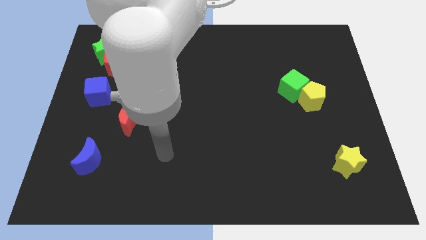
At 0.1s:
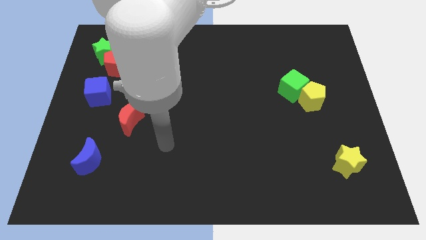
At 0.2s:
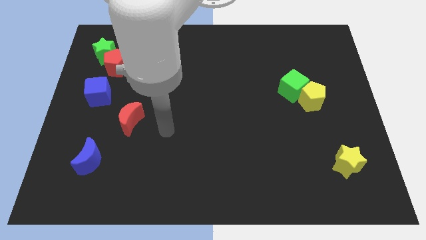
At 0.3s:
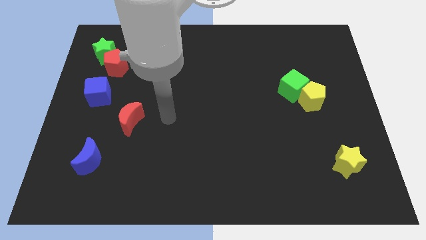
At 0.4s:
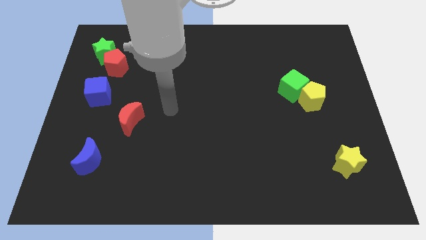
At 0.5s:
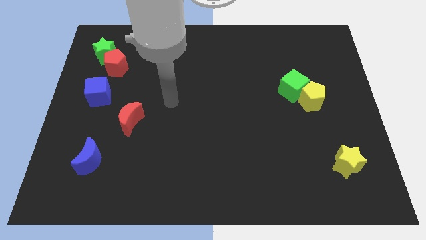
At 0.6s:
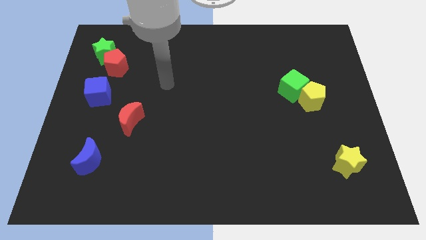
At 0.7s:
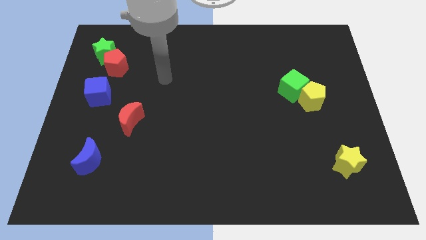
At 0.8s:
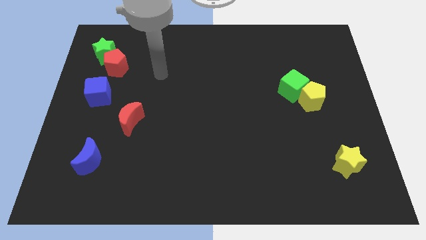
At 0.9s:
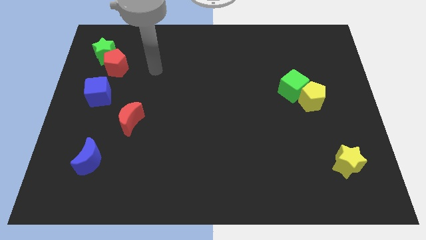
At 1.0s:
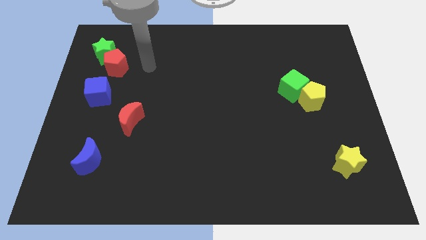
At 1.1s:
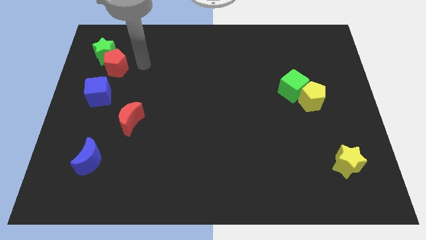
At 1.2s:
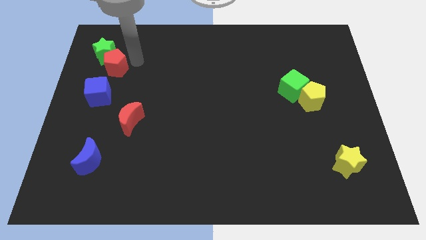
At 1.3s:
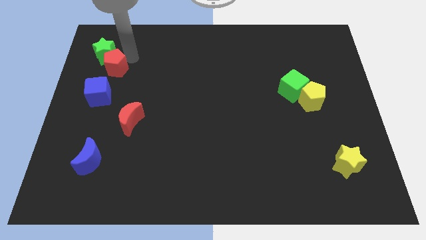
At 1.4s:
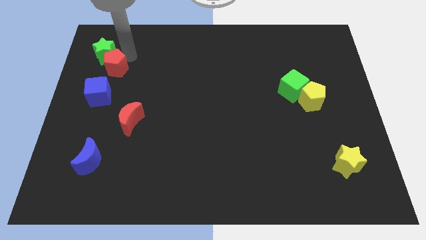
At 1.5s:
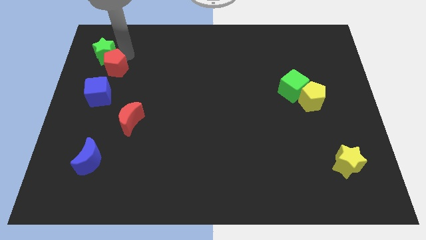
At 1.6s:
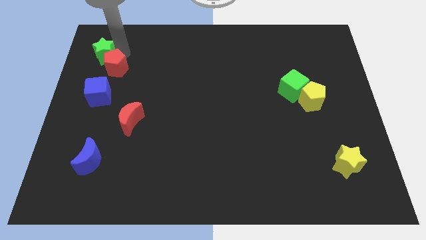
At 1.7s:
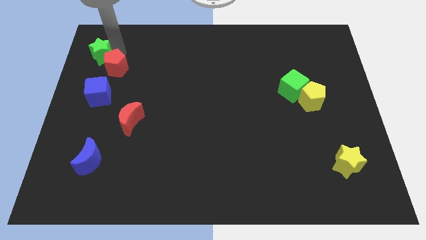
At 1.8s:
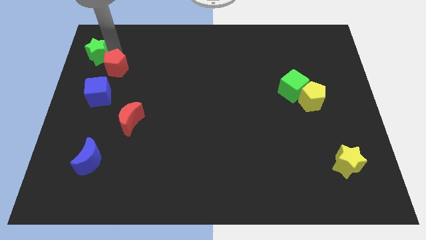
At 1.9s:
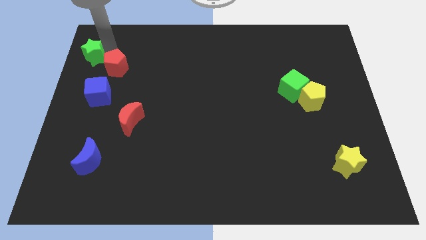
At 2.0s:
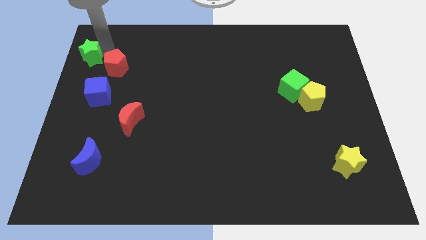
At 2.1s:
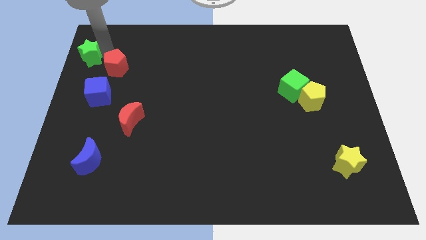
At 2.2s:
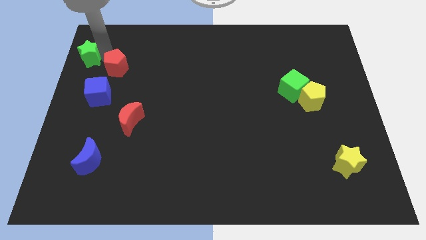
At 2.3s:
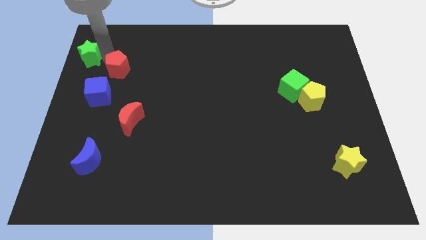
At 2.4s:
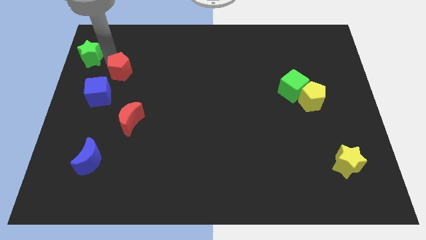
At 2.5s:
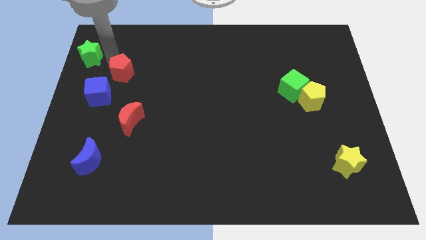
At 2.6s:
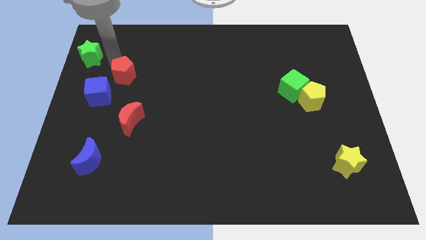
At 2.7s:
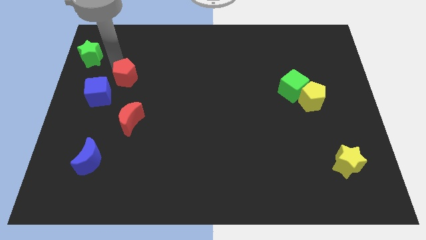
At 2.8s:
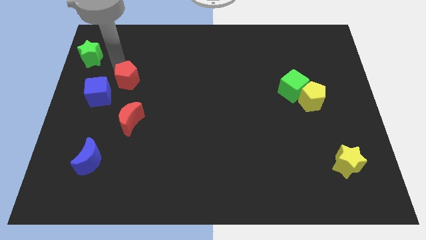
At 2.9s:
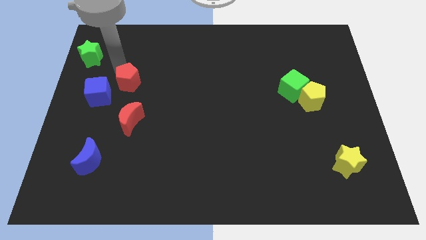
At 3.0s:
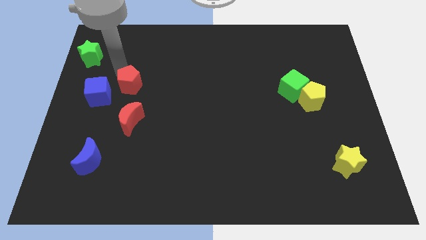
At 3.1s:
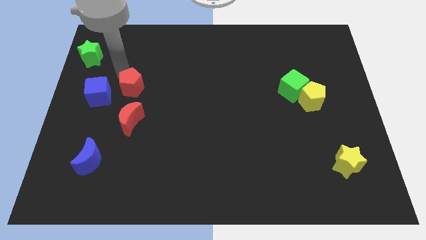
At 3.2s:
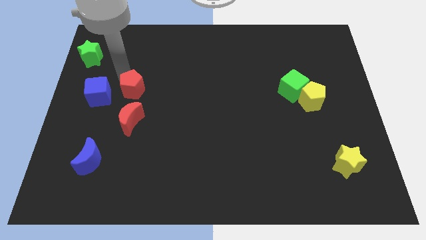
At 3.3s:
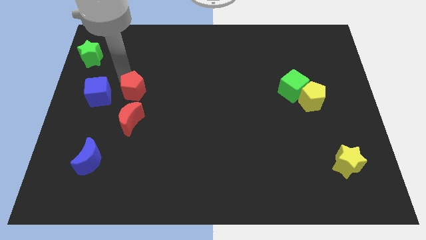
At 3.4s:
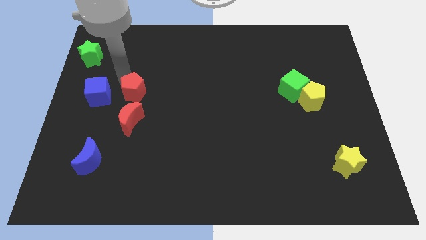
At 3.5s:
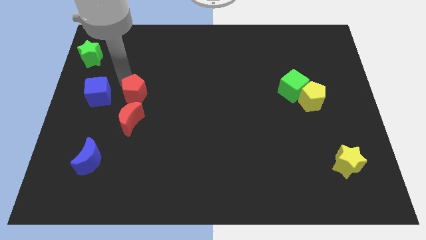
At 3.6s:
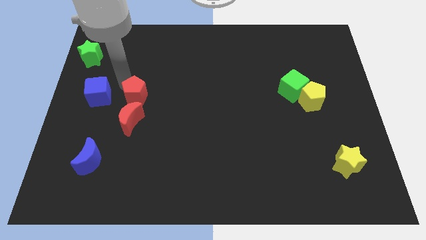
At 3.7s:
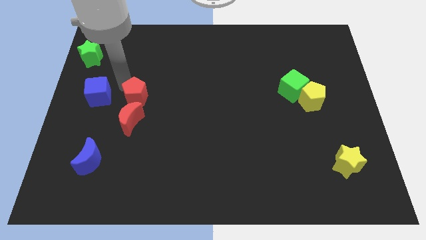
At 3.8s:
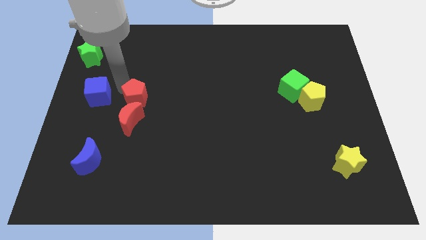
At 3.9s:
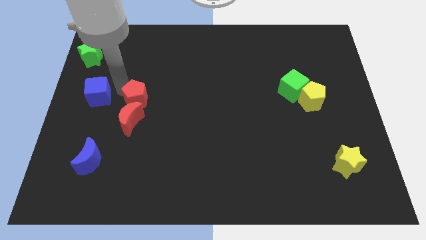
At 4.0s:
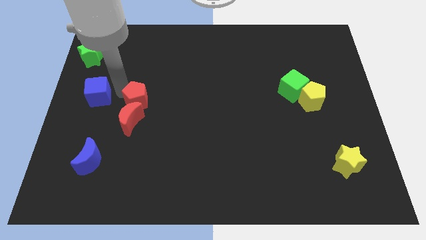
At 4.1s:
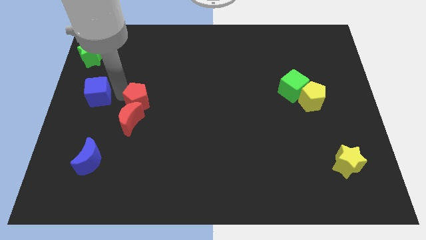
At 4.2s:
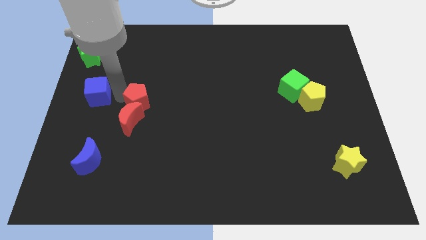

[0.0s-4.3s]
slide the red pentagon towards the red moon

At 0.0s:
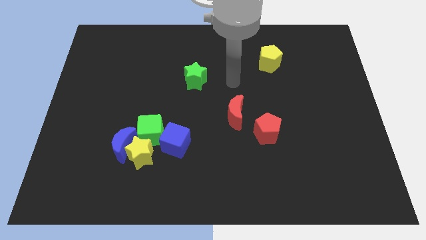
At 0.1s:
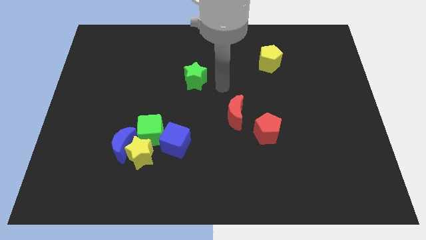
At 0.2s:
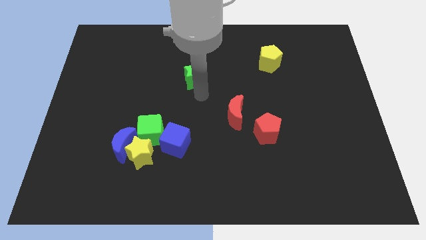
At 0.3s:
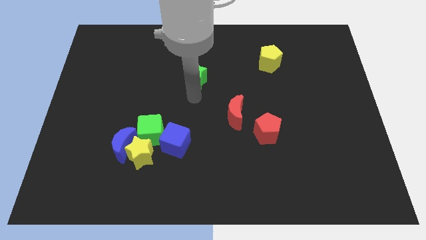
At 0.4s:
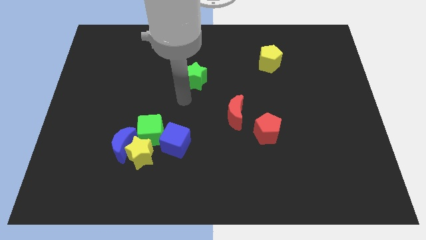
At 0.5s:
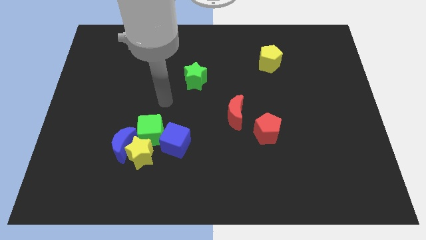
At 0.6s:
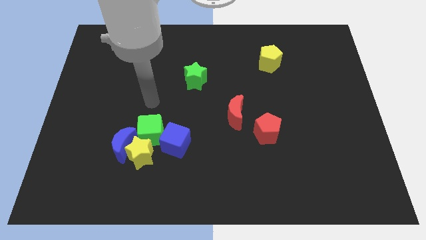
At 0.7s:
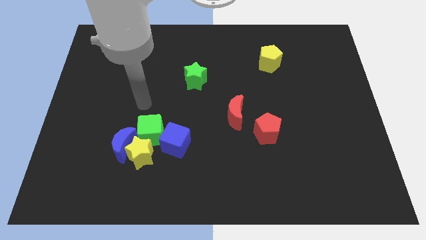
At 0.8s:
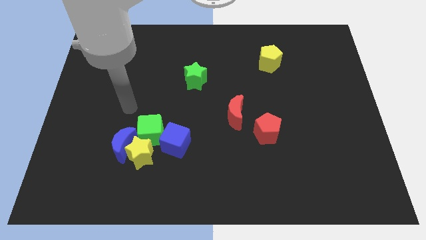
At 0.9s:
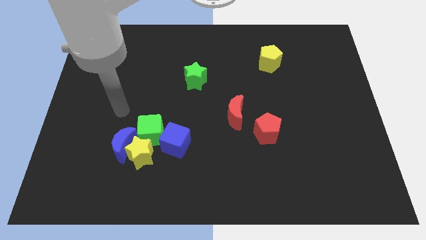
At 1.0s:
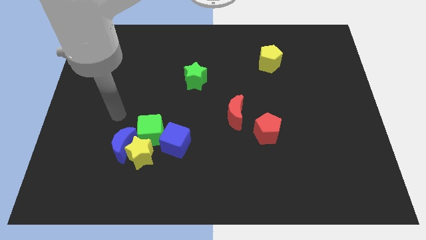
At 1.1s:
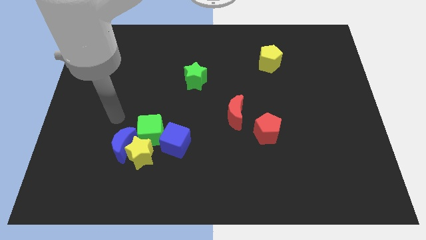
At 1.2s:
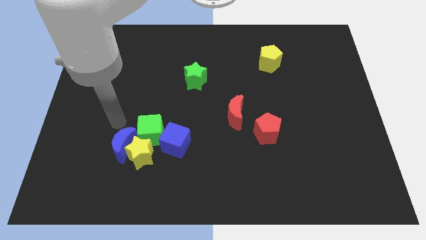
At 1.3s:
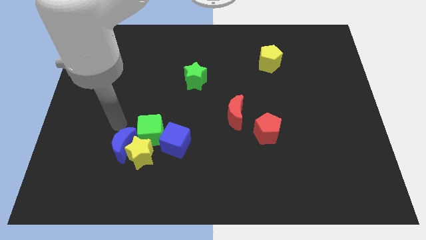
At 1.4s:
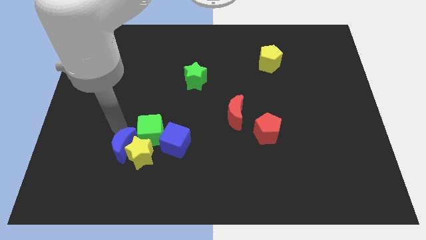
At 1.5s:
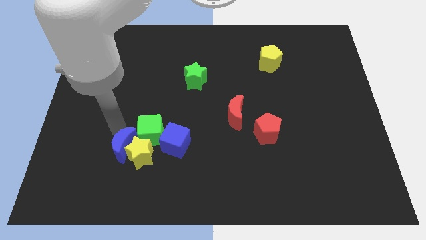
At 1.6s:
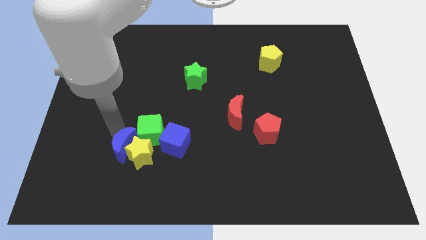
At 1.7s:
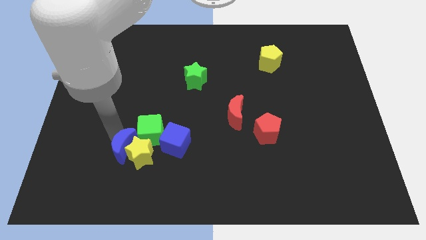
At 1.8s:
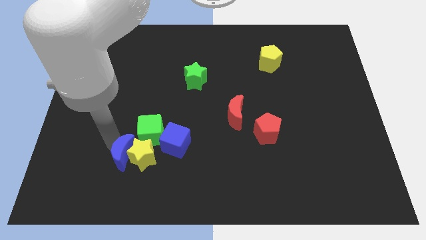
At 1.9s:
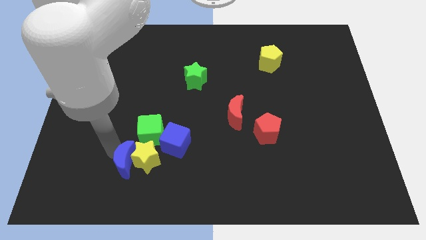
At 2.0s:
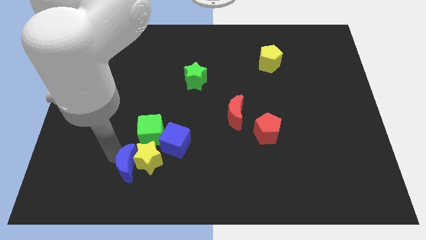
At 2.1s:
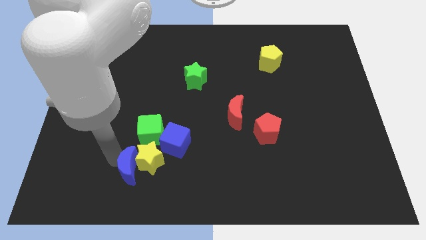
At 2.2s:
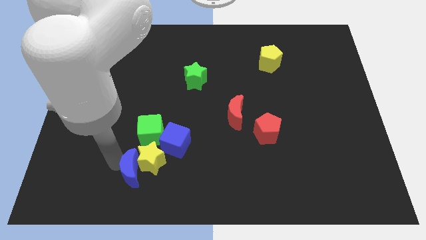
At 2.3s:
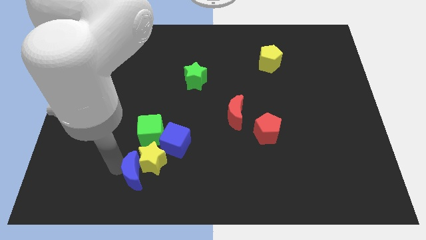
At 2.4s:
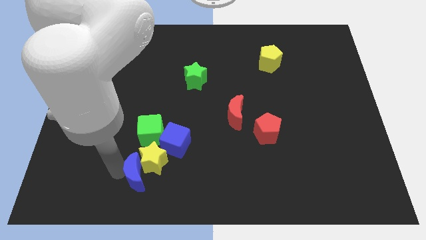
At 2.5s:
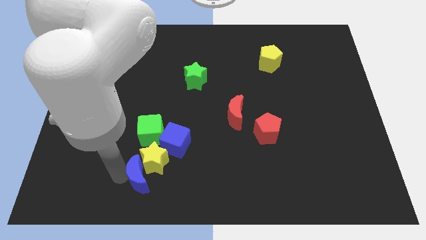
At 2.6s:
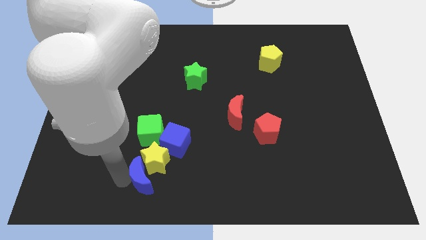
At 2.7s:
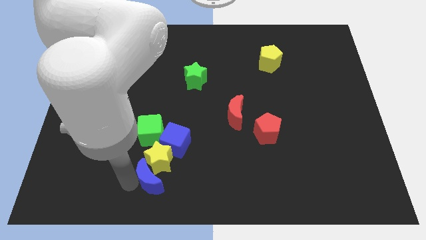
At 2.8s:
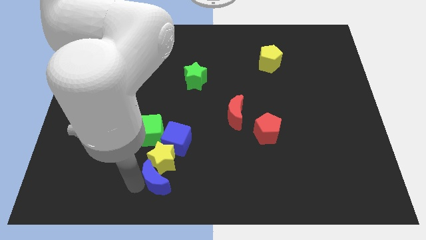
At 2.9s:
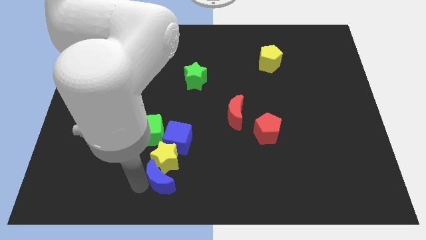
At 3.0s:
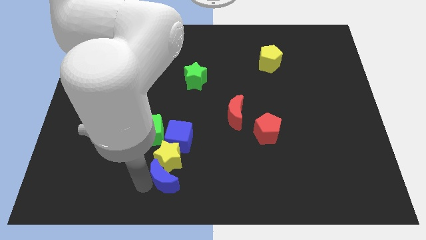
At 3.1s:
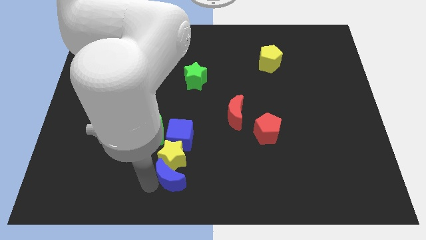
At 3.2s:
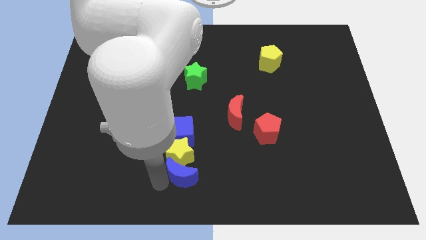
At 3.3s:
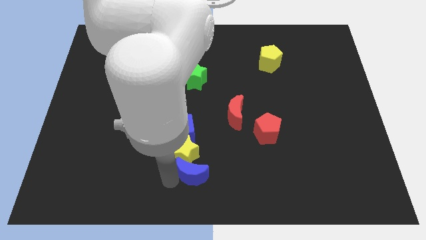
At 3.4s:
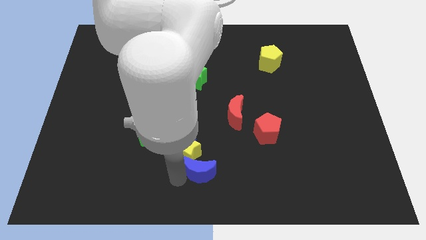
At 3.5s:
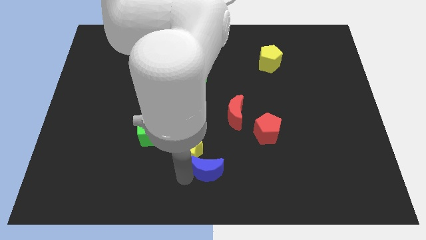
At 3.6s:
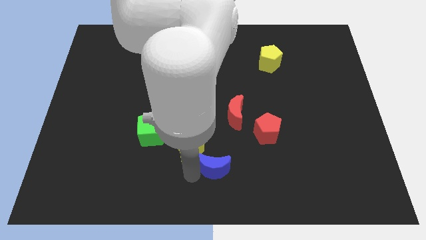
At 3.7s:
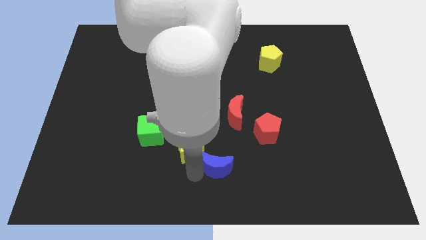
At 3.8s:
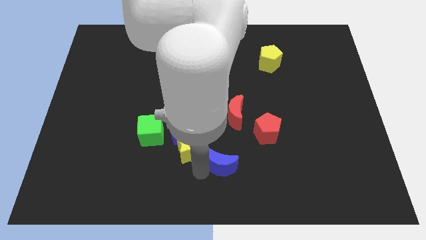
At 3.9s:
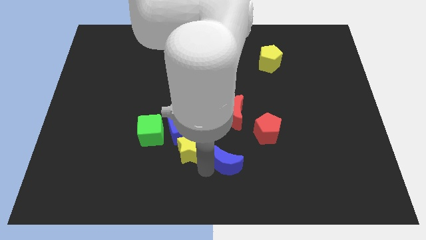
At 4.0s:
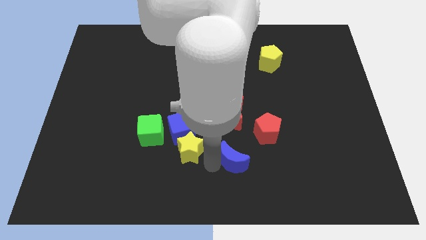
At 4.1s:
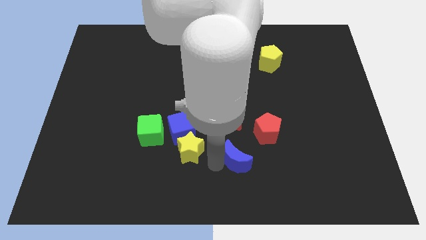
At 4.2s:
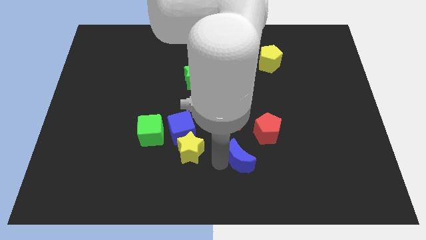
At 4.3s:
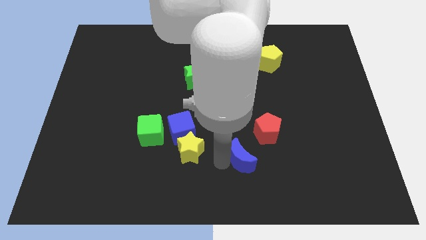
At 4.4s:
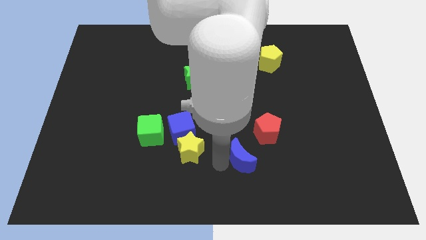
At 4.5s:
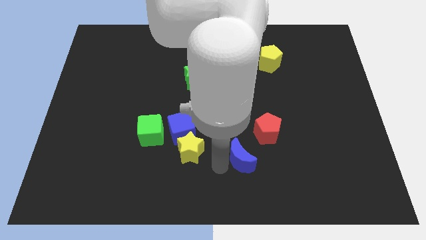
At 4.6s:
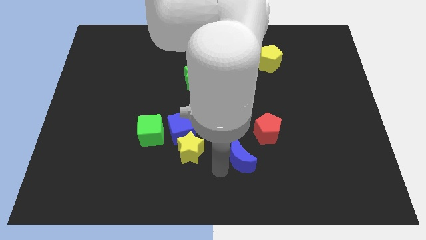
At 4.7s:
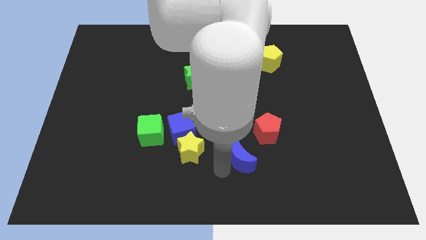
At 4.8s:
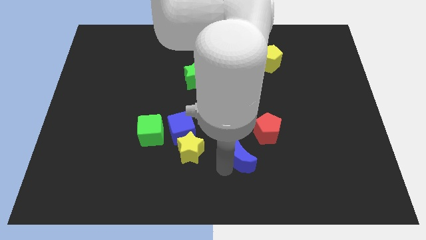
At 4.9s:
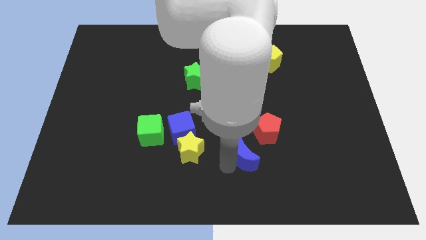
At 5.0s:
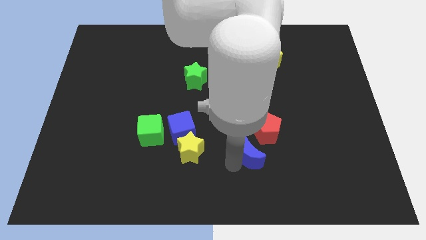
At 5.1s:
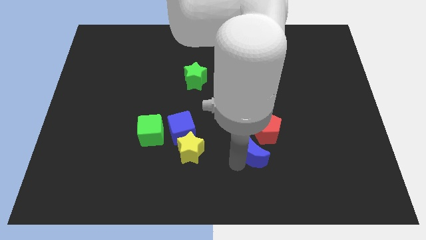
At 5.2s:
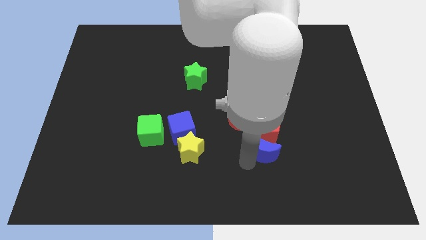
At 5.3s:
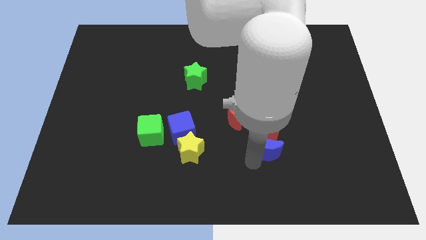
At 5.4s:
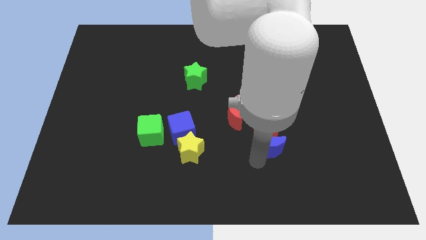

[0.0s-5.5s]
put the blue moon close to the red pentagon
